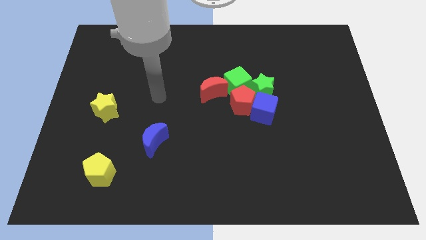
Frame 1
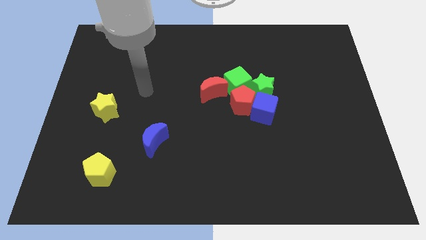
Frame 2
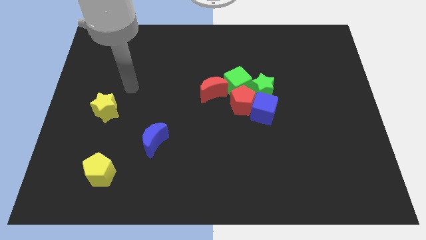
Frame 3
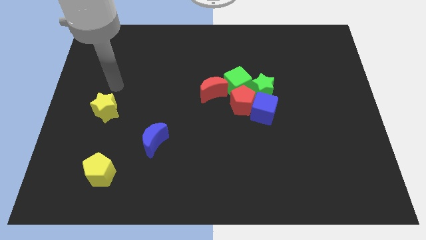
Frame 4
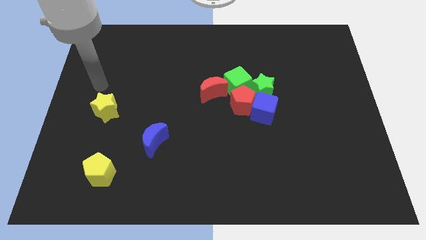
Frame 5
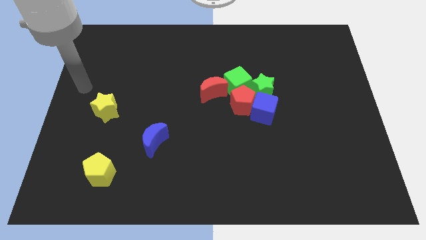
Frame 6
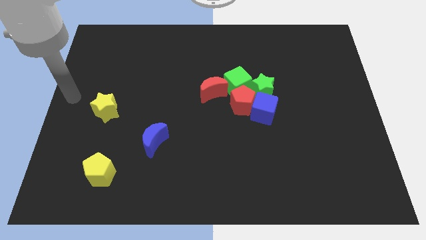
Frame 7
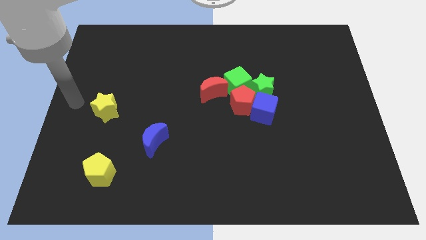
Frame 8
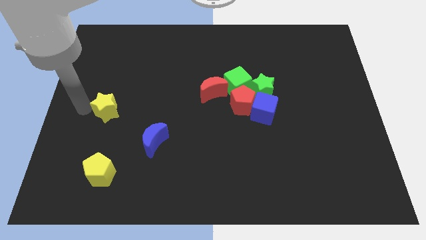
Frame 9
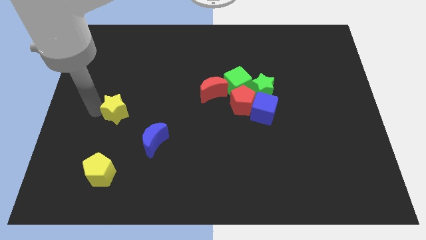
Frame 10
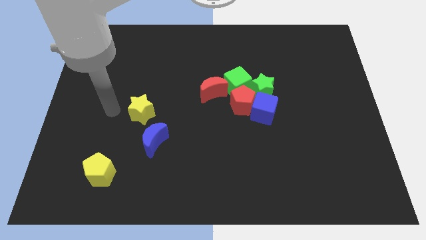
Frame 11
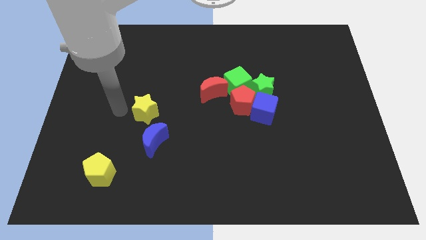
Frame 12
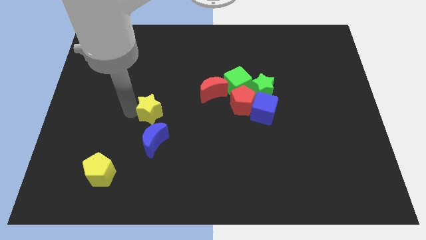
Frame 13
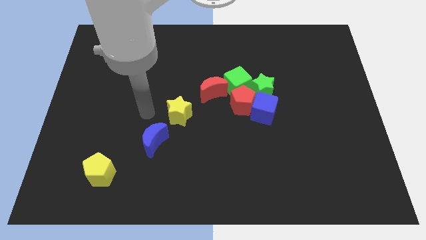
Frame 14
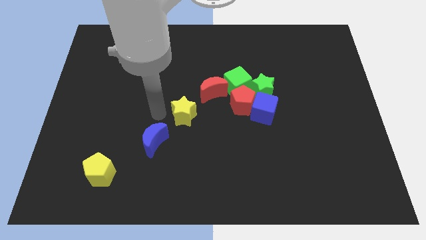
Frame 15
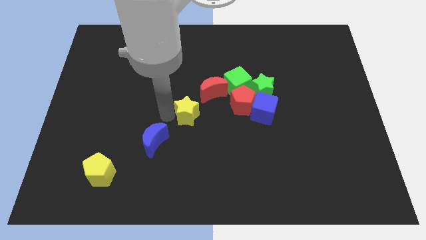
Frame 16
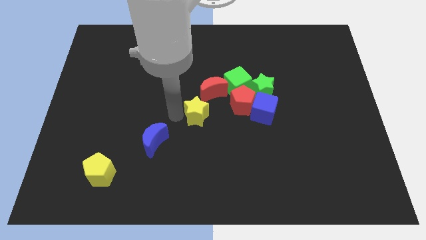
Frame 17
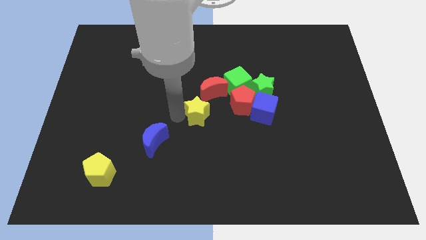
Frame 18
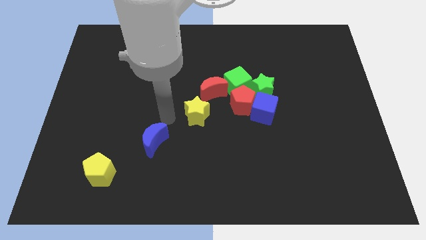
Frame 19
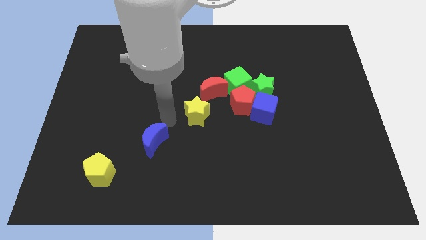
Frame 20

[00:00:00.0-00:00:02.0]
move the yellow star below the red moon

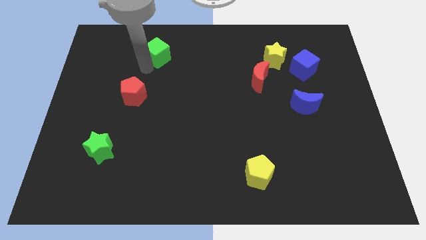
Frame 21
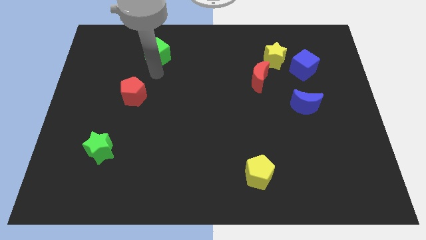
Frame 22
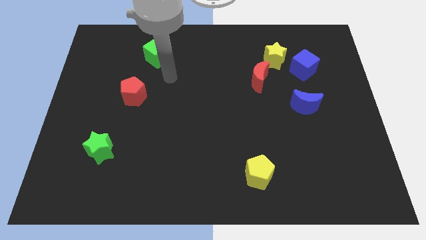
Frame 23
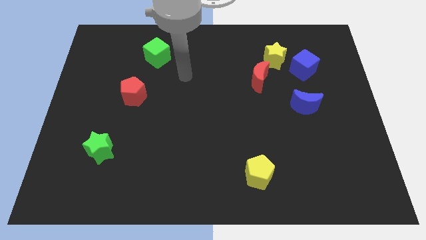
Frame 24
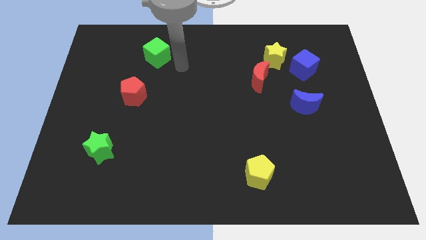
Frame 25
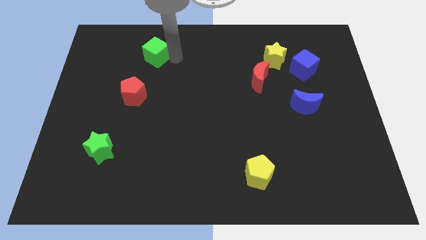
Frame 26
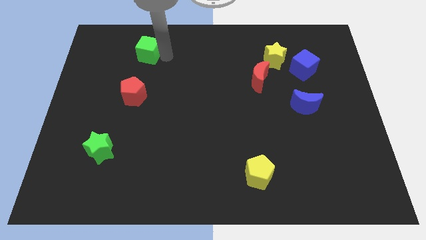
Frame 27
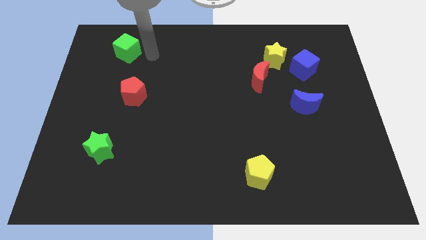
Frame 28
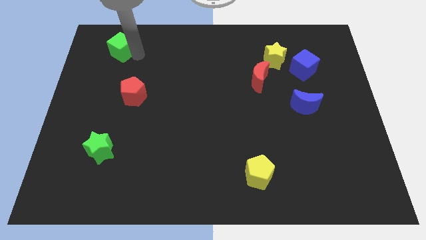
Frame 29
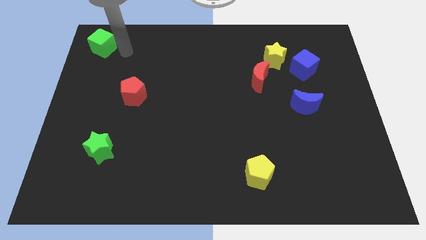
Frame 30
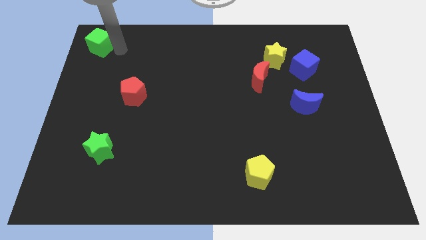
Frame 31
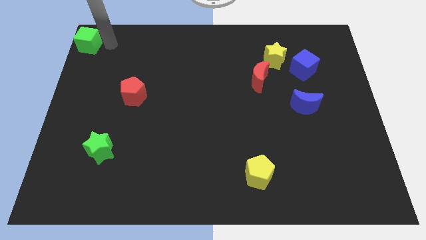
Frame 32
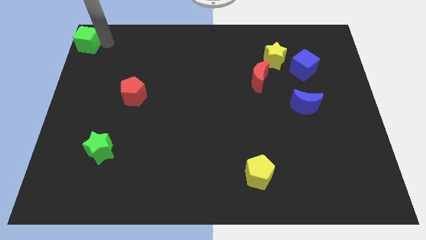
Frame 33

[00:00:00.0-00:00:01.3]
place the green cube to the top corner of the board

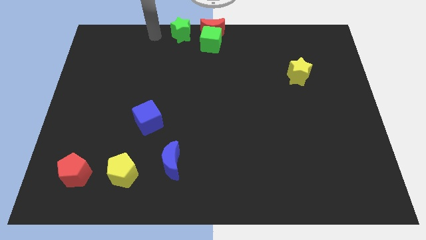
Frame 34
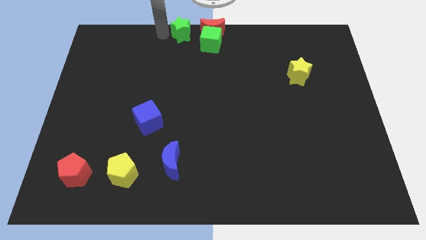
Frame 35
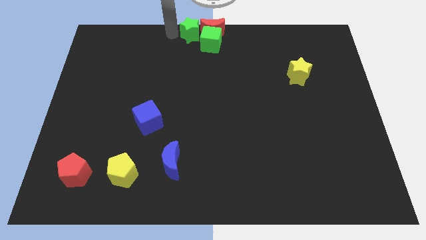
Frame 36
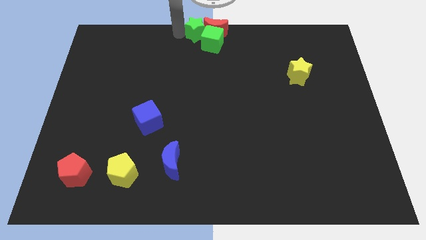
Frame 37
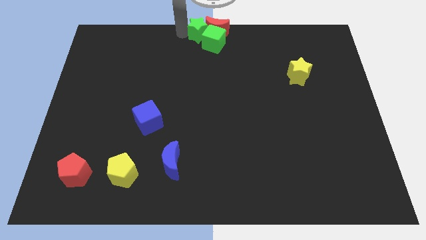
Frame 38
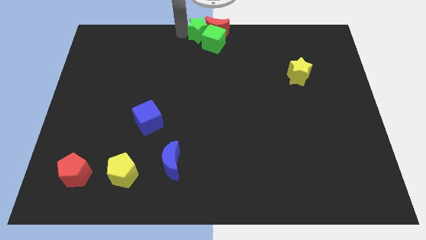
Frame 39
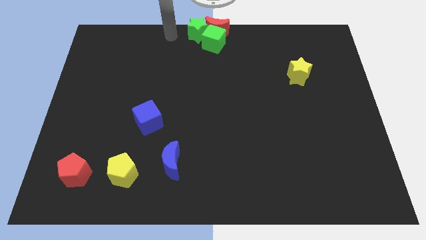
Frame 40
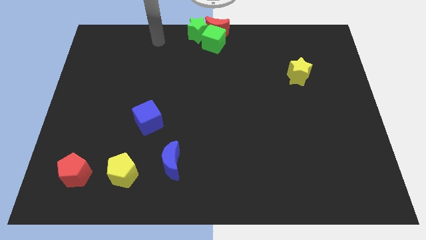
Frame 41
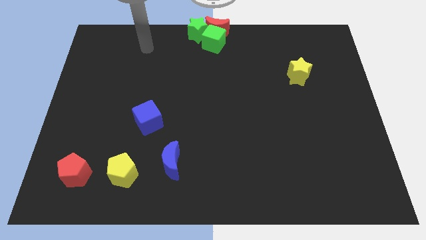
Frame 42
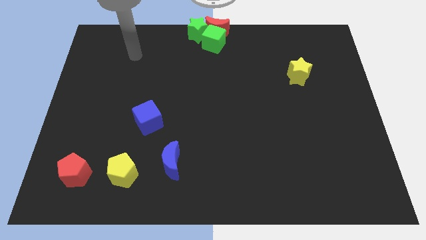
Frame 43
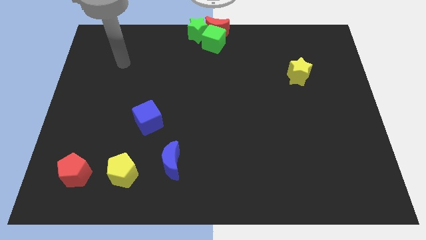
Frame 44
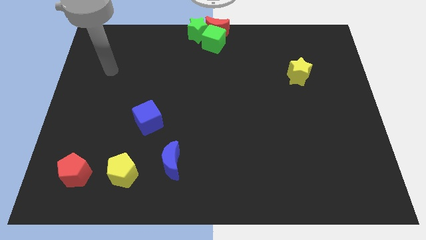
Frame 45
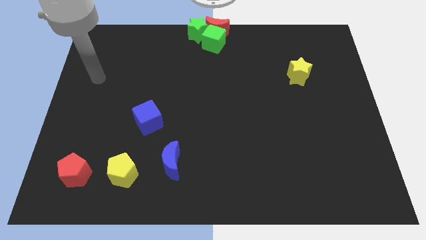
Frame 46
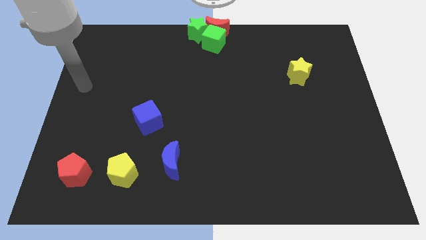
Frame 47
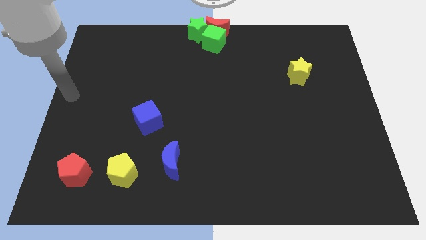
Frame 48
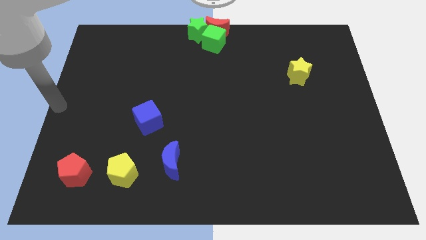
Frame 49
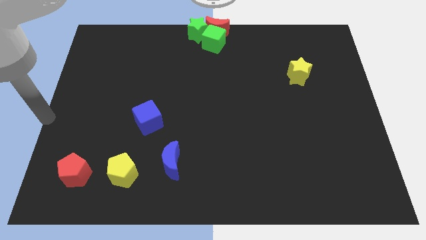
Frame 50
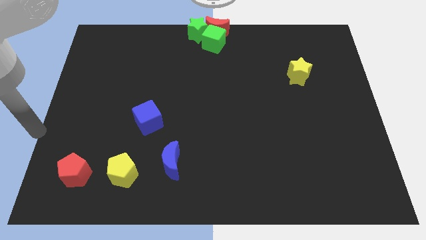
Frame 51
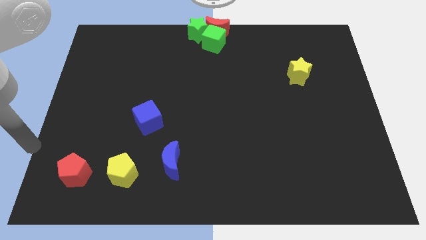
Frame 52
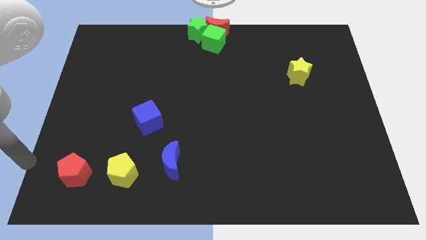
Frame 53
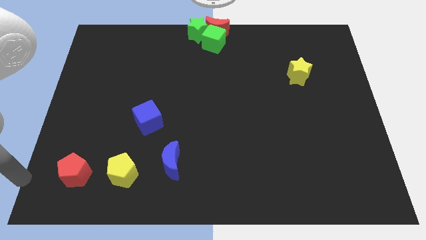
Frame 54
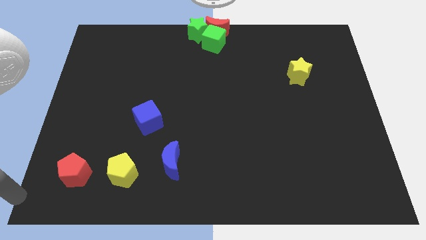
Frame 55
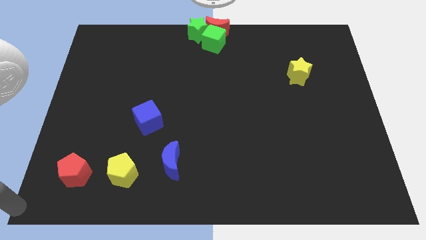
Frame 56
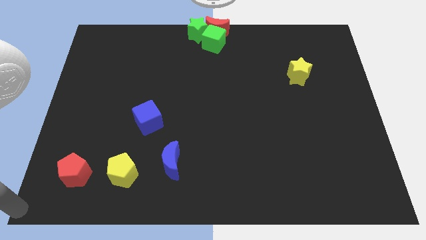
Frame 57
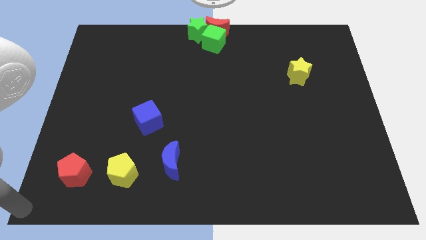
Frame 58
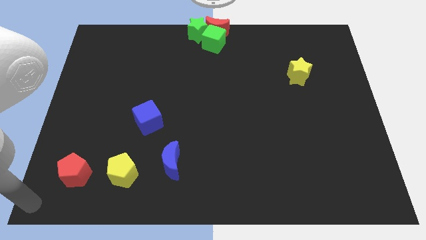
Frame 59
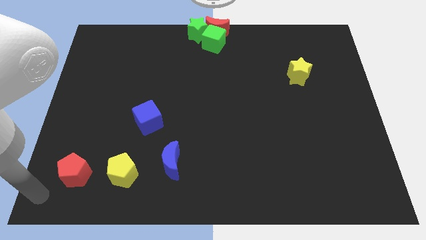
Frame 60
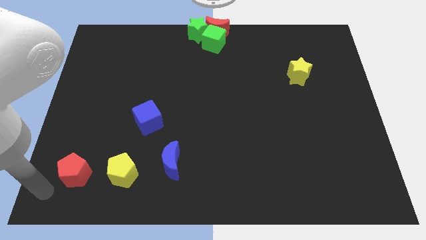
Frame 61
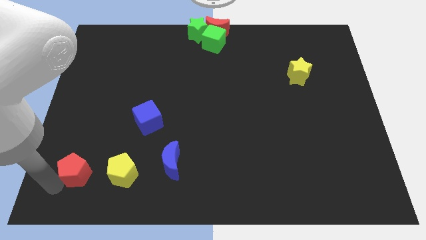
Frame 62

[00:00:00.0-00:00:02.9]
place your arm to the bottom of red pentagon

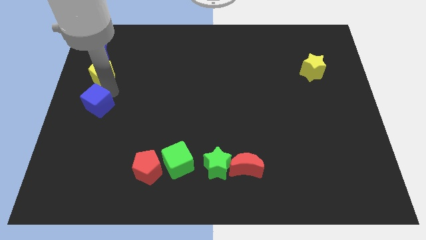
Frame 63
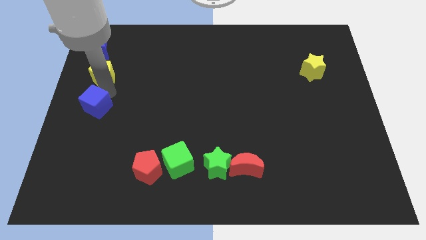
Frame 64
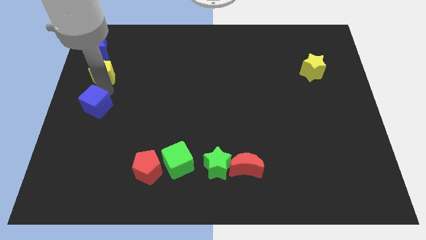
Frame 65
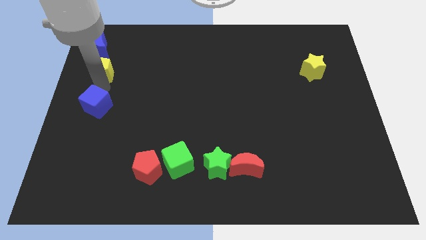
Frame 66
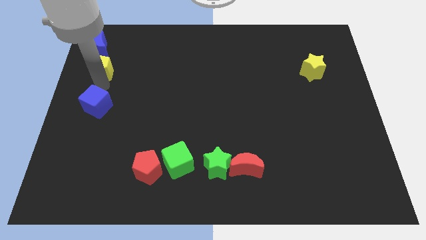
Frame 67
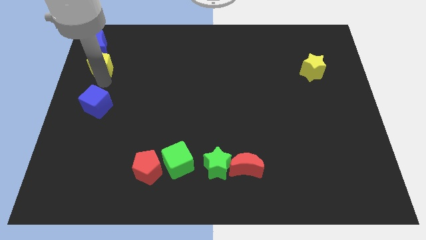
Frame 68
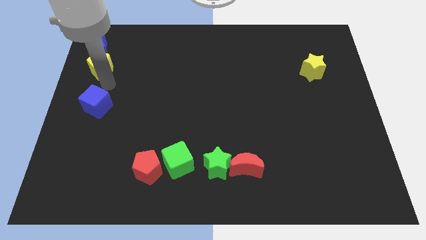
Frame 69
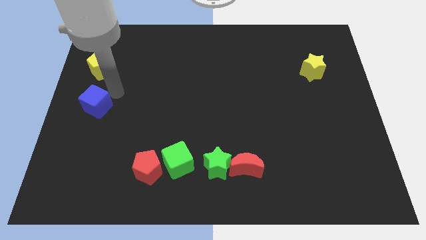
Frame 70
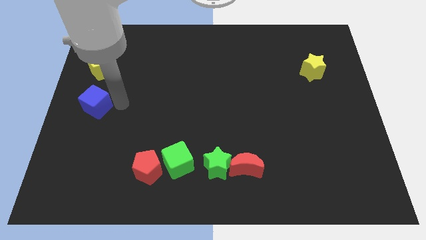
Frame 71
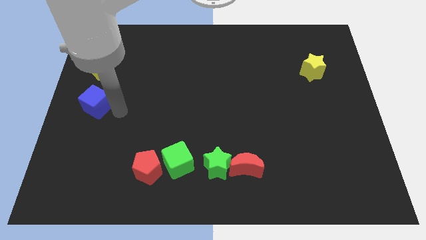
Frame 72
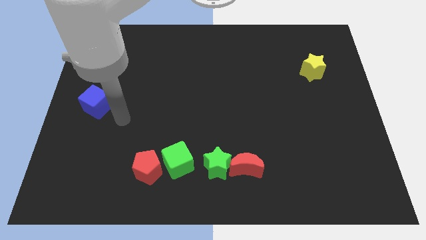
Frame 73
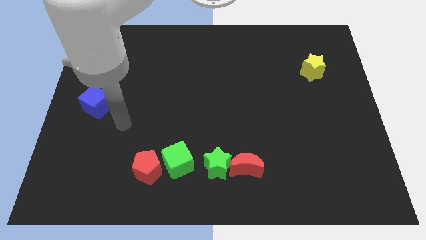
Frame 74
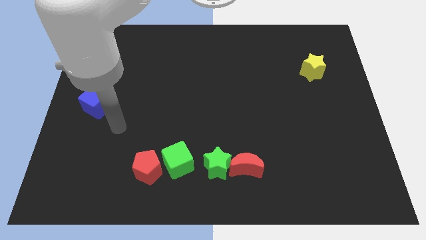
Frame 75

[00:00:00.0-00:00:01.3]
move the yellow pentagon slightly towards the bottom of the blue crescent

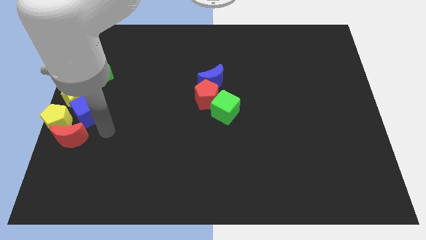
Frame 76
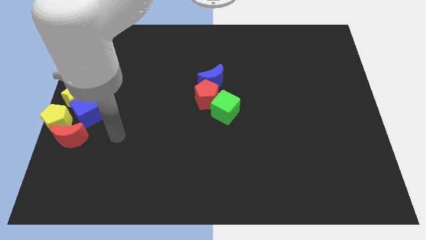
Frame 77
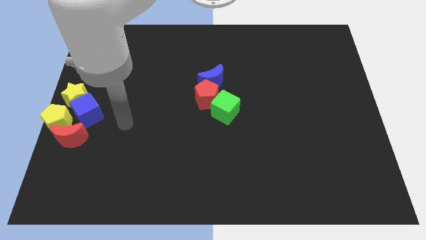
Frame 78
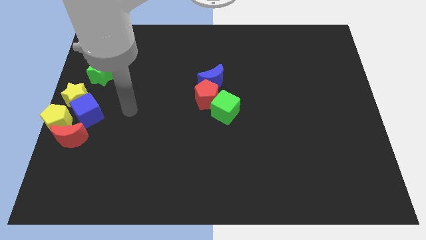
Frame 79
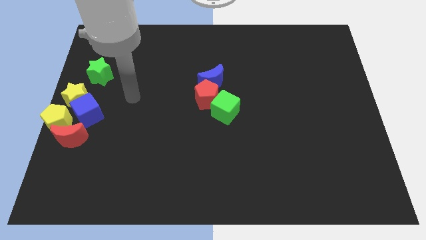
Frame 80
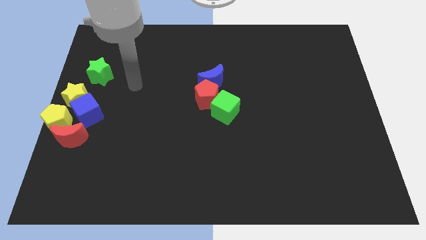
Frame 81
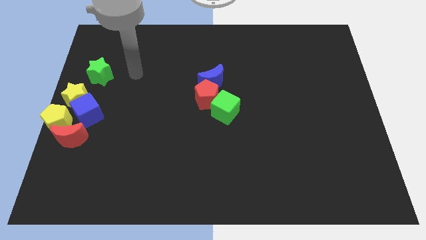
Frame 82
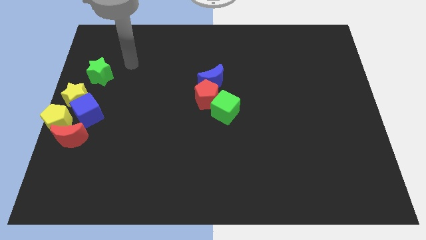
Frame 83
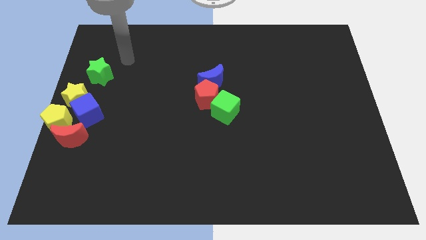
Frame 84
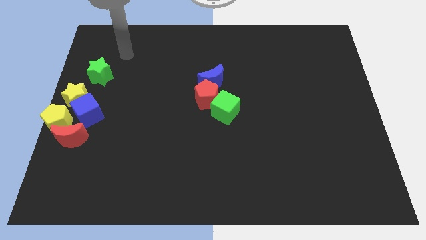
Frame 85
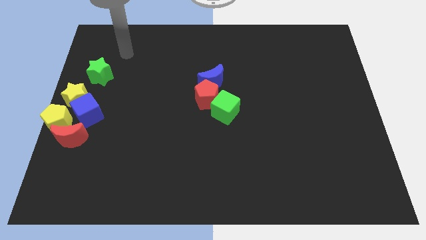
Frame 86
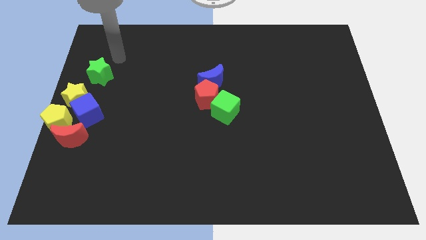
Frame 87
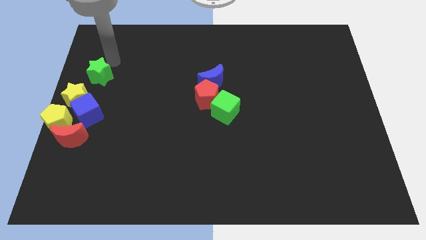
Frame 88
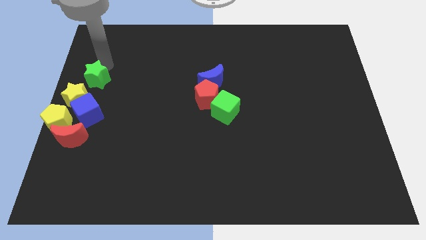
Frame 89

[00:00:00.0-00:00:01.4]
place the hand on the top right of the green star
